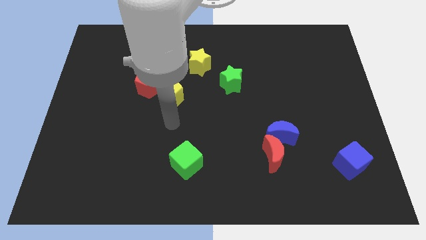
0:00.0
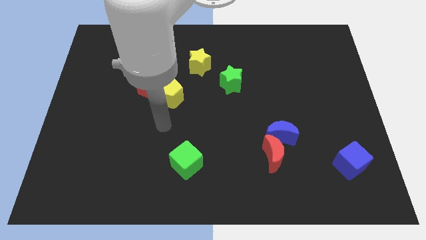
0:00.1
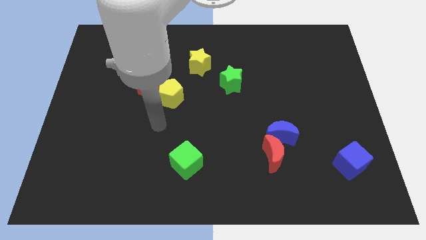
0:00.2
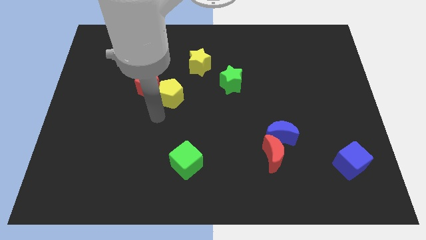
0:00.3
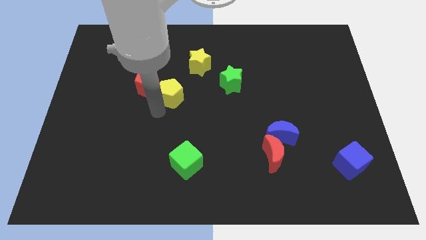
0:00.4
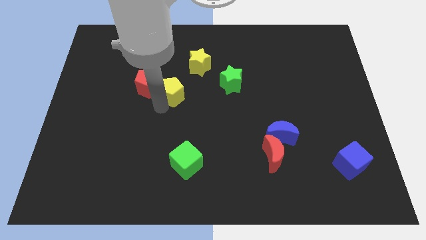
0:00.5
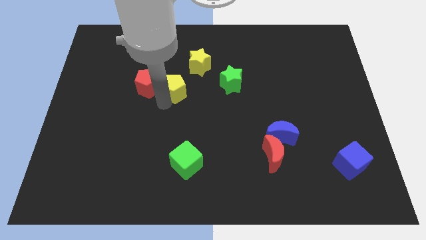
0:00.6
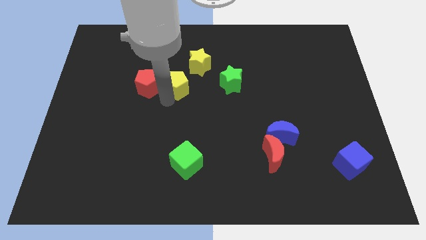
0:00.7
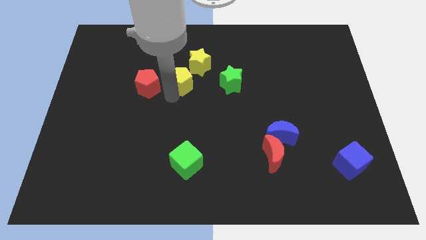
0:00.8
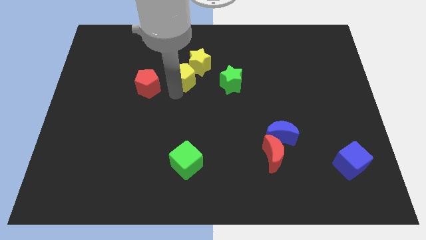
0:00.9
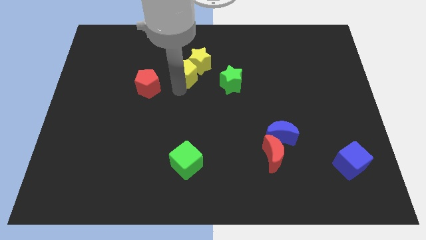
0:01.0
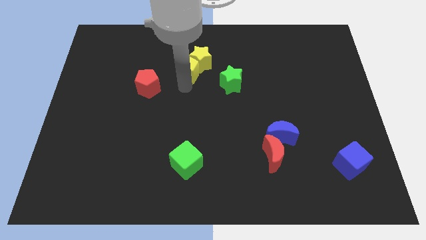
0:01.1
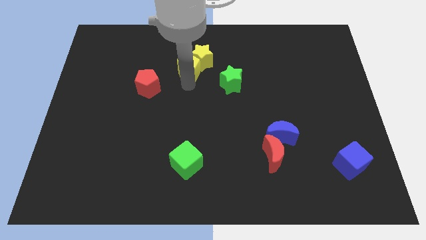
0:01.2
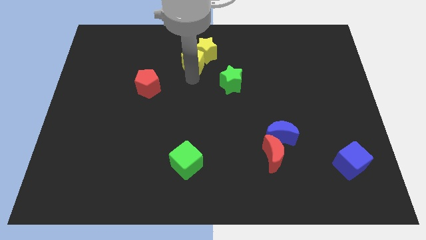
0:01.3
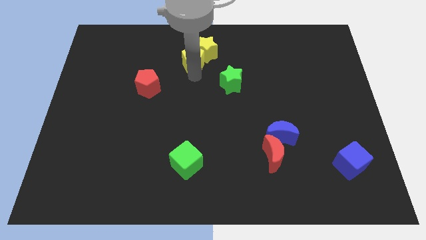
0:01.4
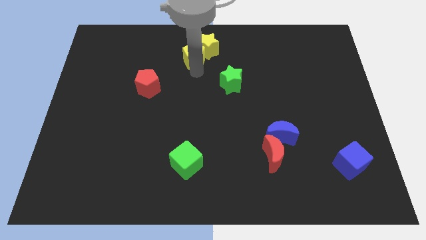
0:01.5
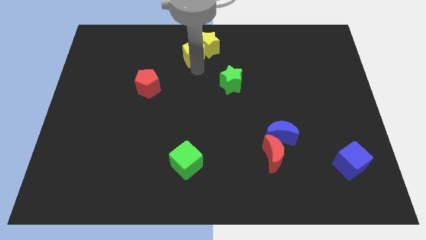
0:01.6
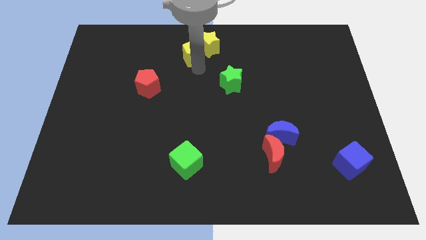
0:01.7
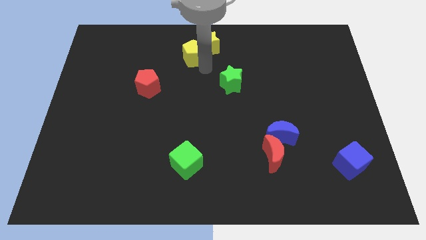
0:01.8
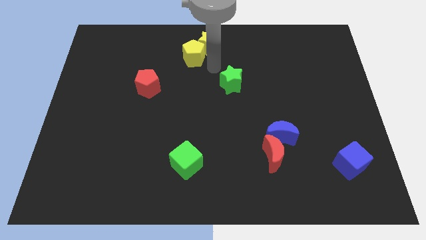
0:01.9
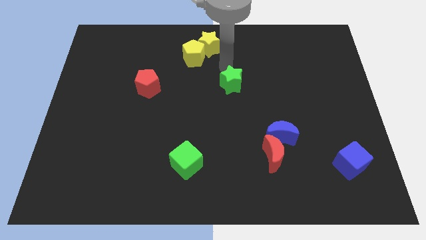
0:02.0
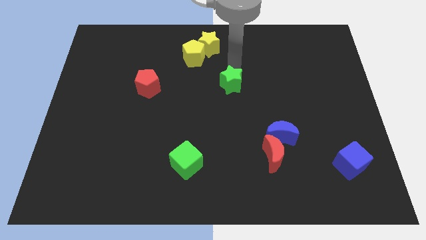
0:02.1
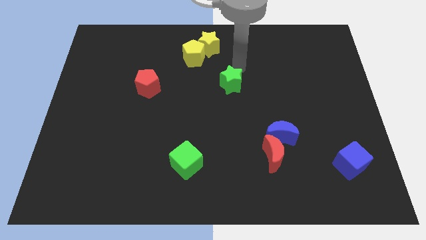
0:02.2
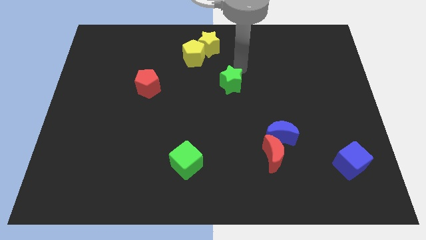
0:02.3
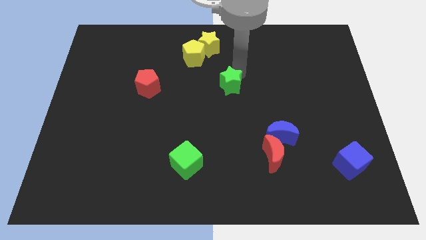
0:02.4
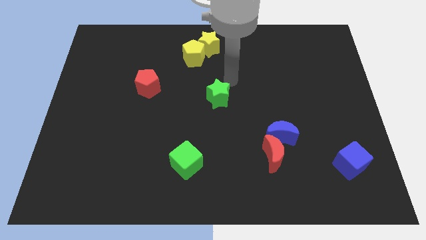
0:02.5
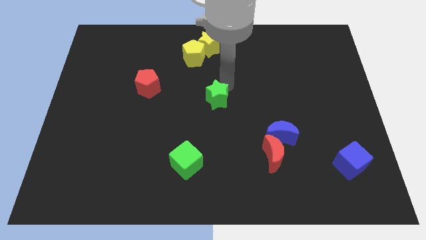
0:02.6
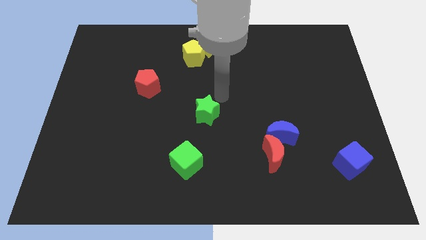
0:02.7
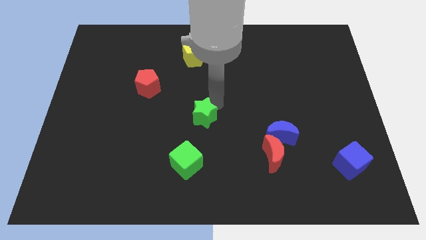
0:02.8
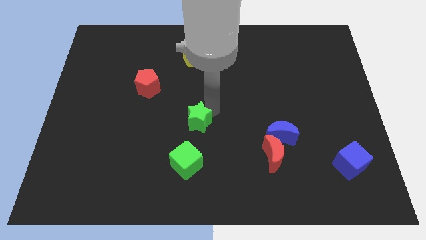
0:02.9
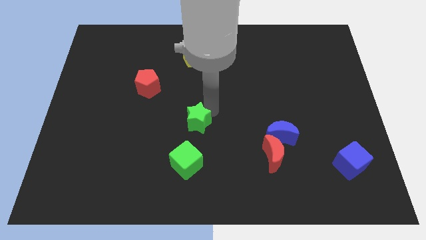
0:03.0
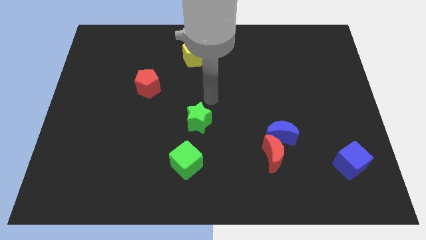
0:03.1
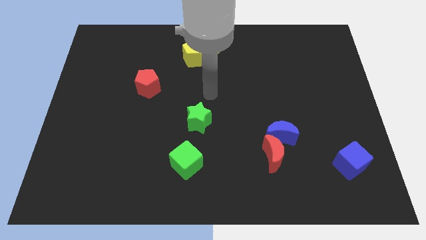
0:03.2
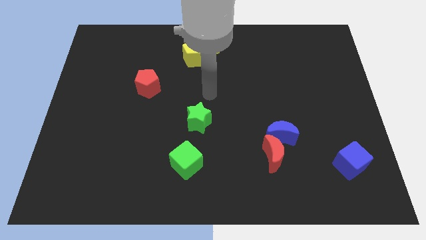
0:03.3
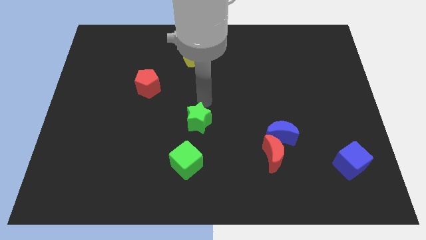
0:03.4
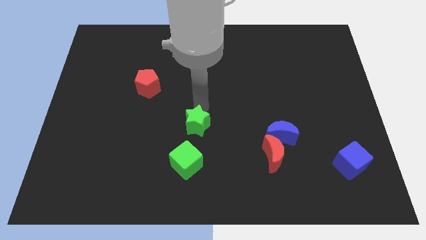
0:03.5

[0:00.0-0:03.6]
push the yellow pentagon into the yellow star

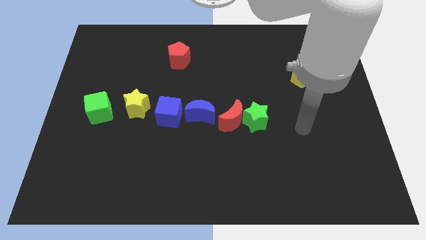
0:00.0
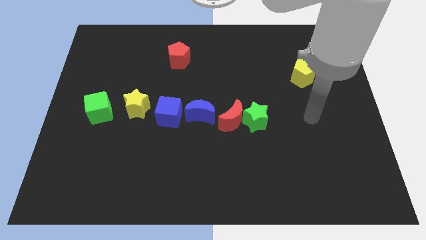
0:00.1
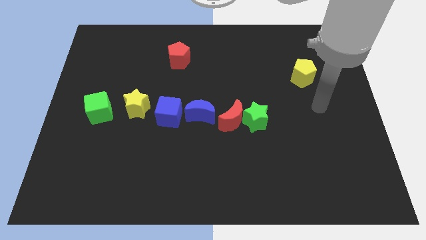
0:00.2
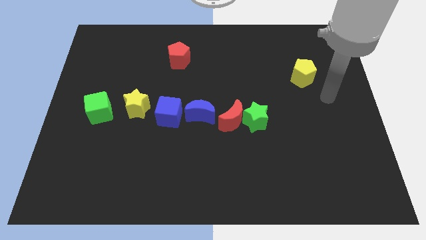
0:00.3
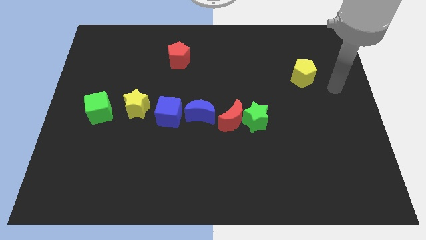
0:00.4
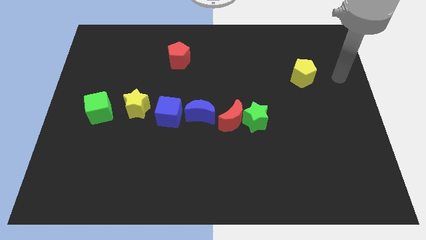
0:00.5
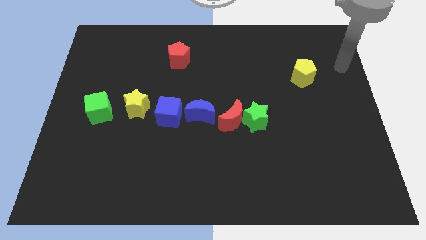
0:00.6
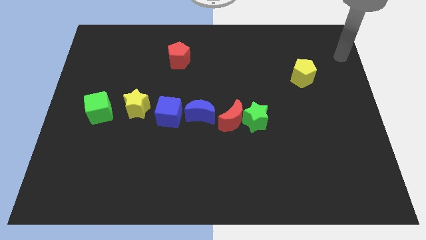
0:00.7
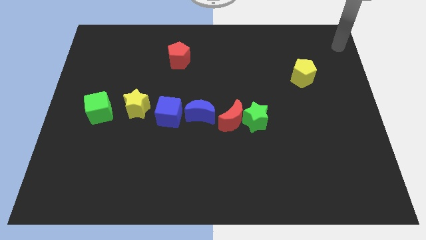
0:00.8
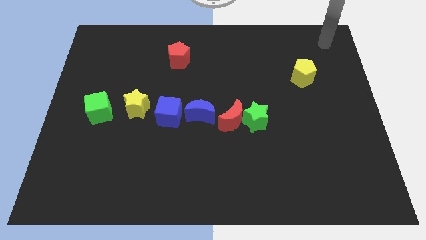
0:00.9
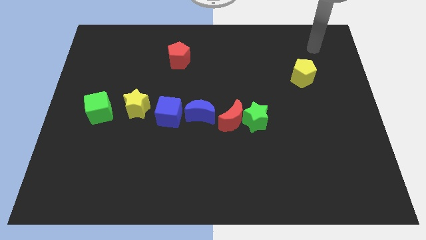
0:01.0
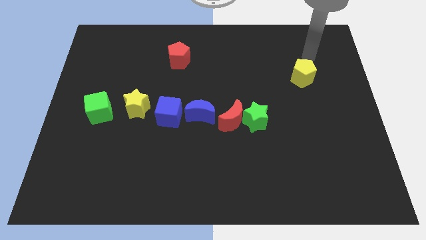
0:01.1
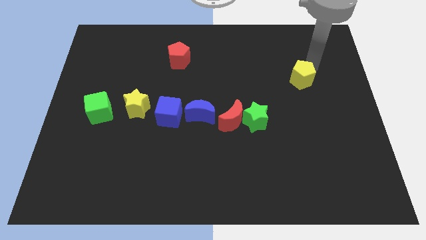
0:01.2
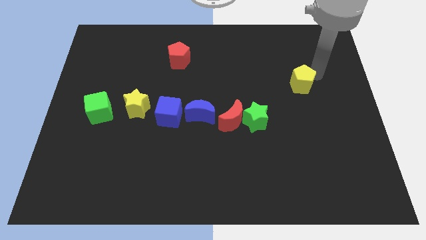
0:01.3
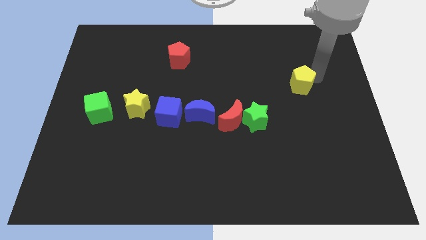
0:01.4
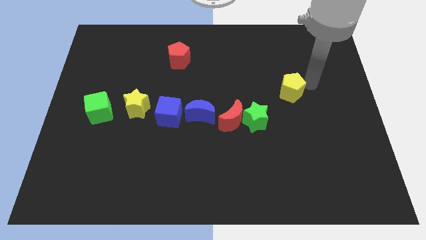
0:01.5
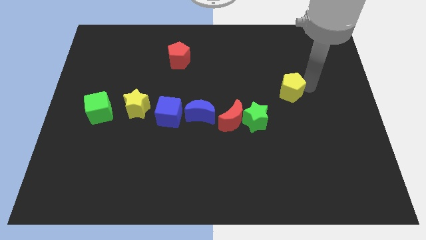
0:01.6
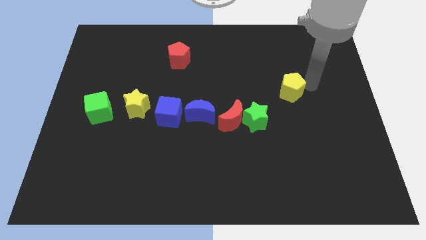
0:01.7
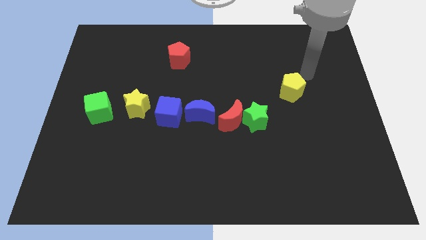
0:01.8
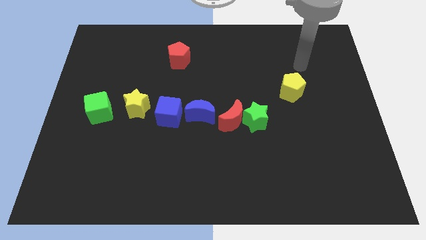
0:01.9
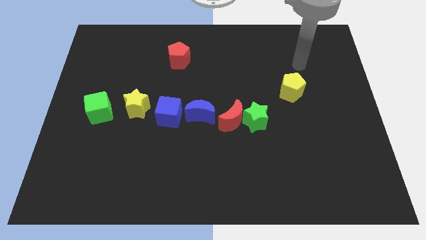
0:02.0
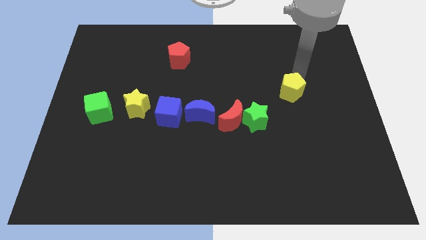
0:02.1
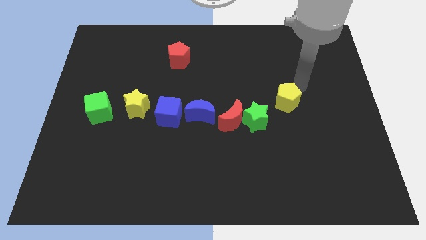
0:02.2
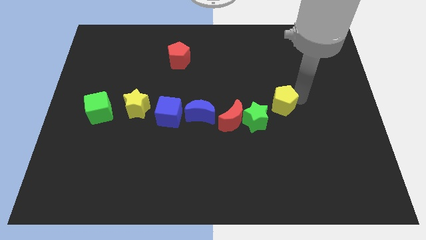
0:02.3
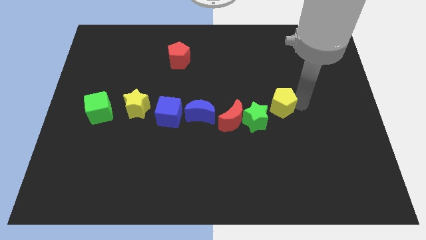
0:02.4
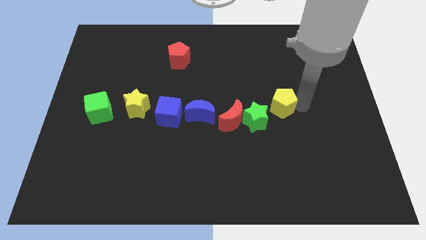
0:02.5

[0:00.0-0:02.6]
push the yellow pentagon slightly downwards

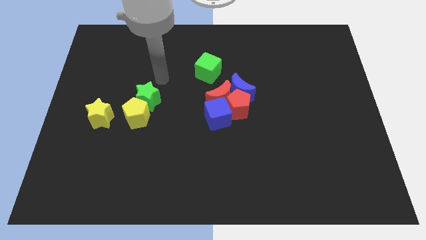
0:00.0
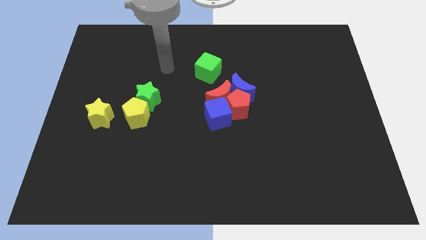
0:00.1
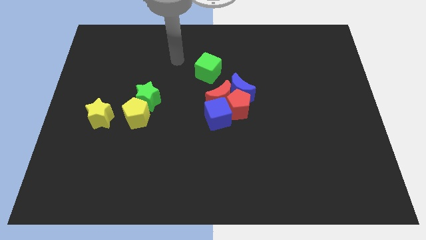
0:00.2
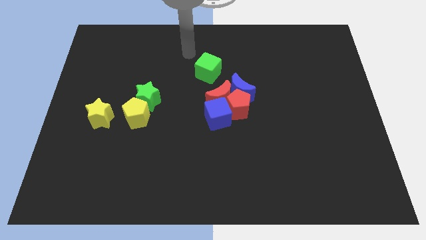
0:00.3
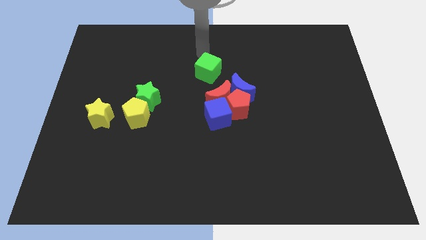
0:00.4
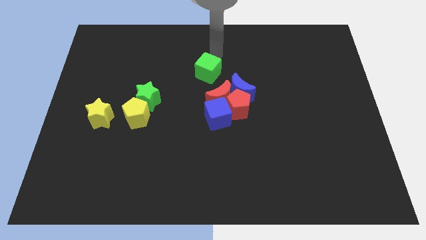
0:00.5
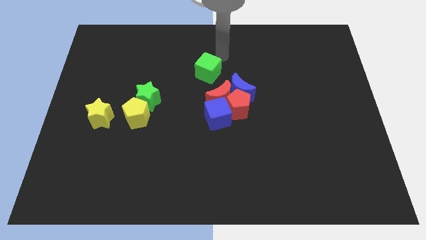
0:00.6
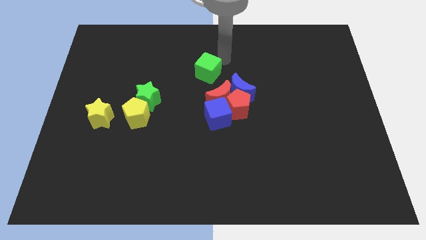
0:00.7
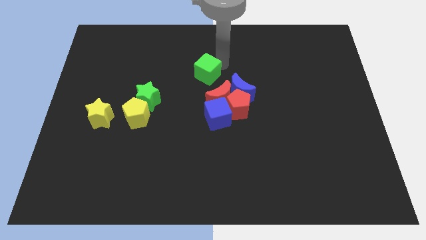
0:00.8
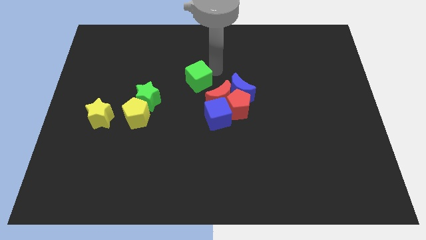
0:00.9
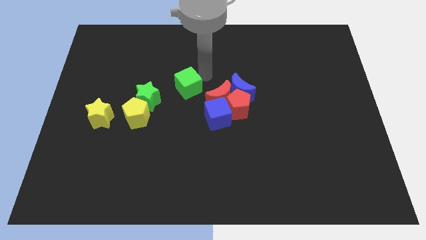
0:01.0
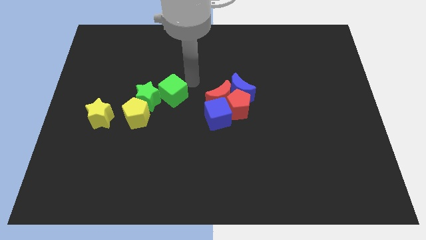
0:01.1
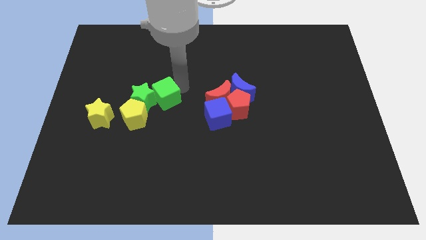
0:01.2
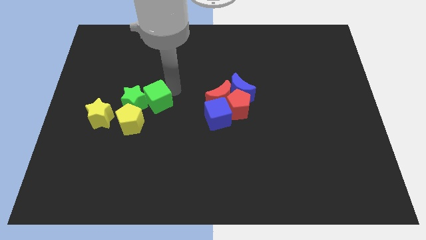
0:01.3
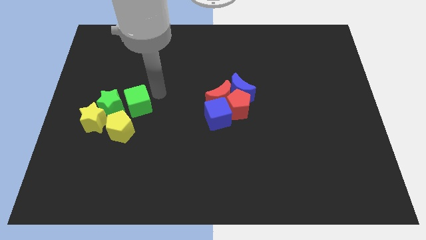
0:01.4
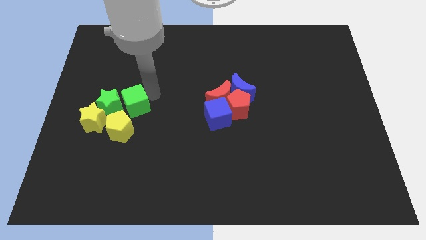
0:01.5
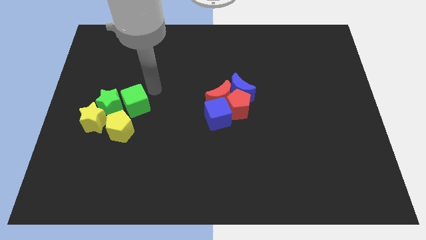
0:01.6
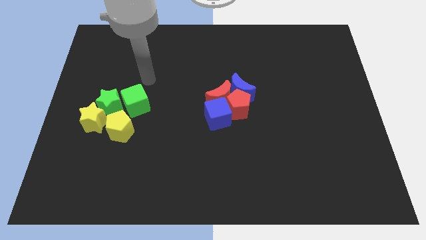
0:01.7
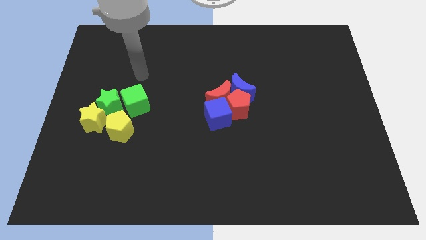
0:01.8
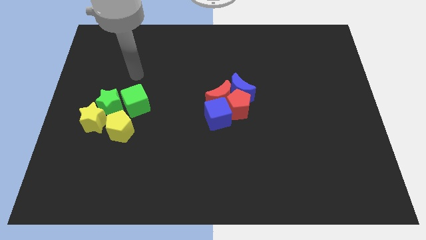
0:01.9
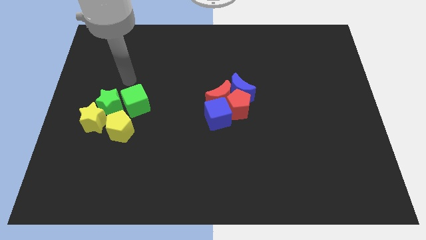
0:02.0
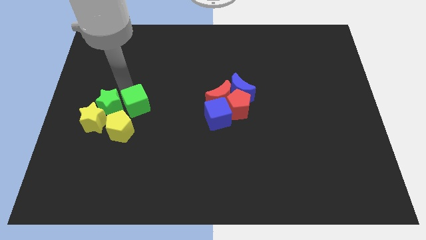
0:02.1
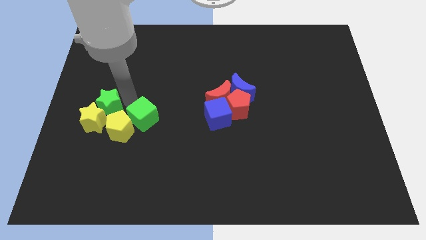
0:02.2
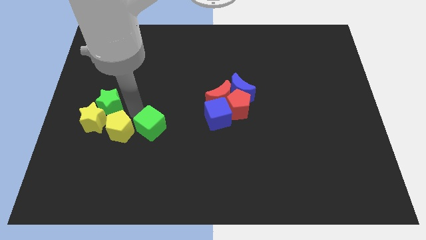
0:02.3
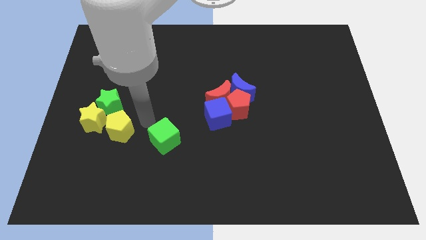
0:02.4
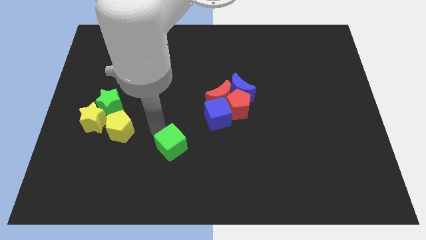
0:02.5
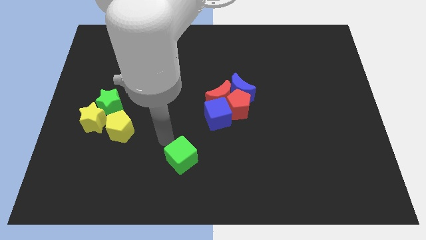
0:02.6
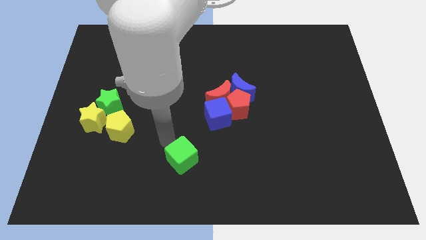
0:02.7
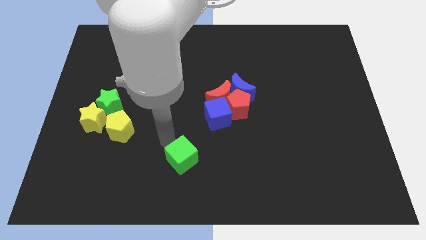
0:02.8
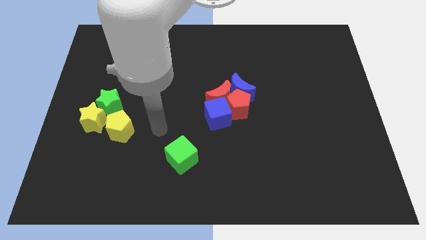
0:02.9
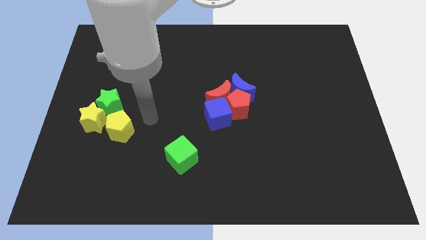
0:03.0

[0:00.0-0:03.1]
move green cube slightly towards the bottom center of the board
